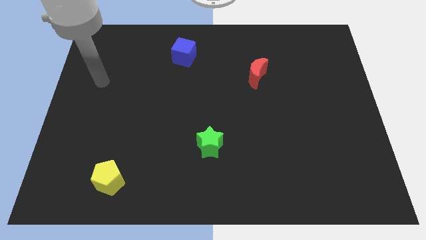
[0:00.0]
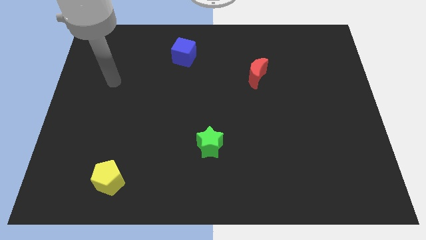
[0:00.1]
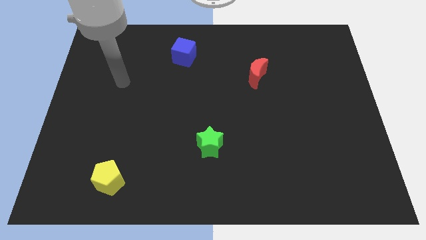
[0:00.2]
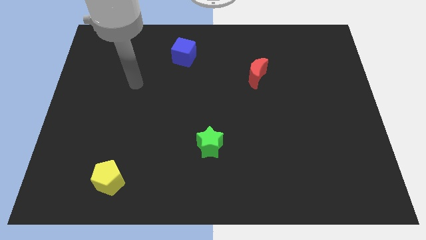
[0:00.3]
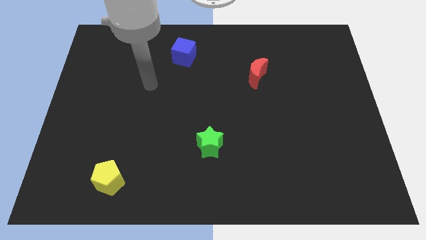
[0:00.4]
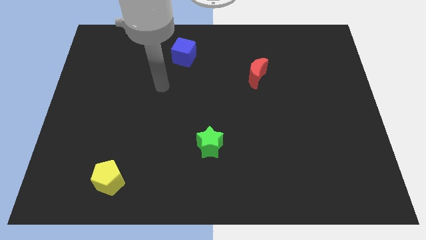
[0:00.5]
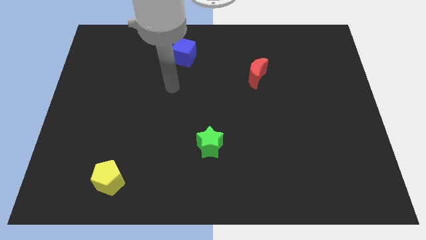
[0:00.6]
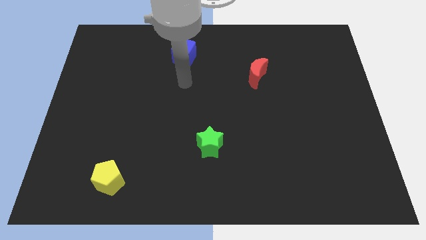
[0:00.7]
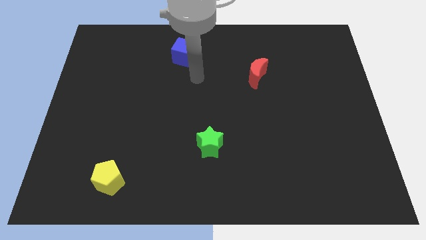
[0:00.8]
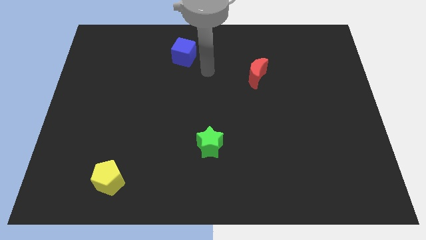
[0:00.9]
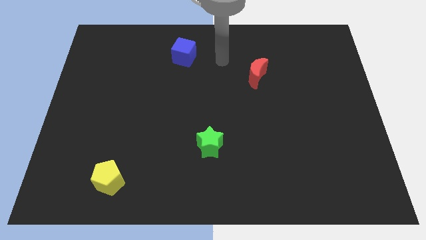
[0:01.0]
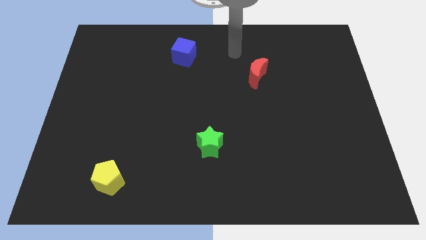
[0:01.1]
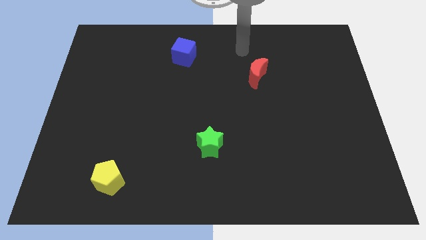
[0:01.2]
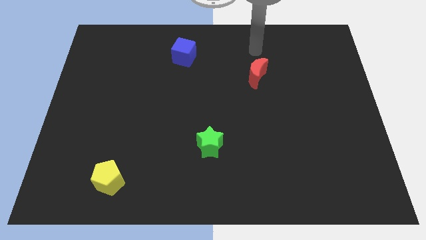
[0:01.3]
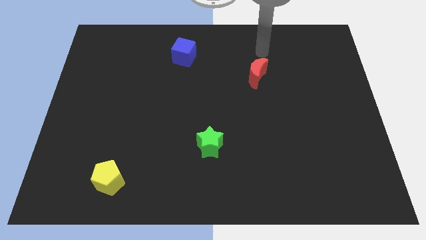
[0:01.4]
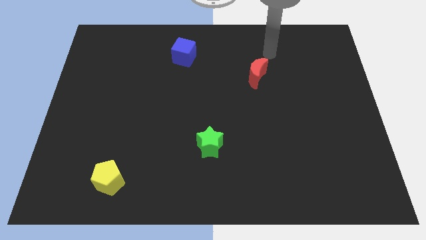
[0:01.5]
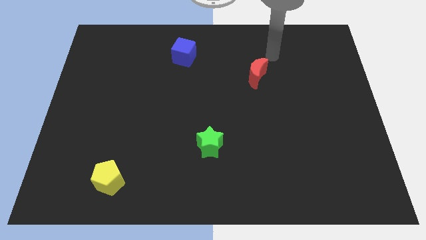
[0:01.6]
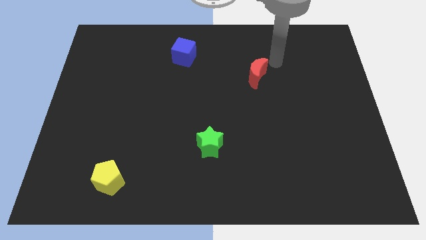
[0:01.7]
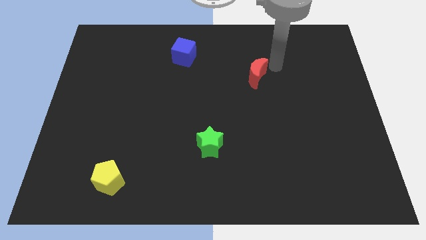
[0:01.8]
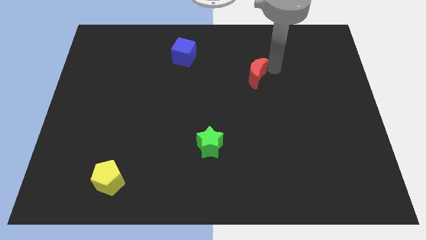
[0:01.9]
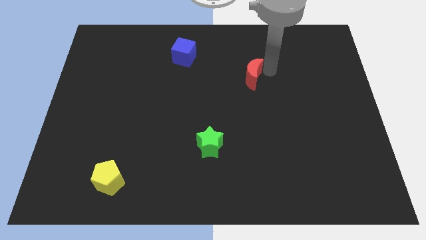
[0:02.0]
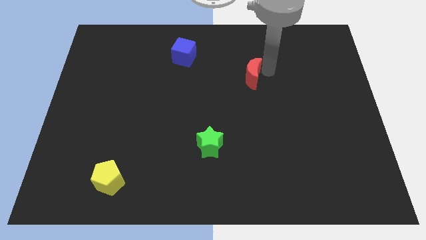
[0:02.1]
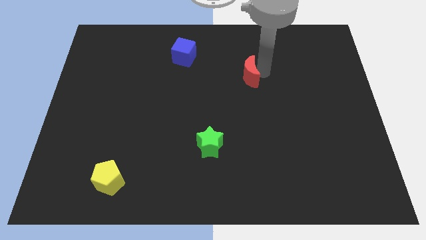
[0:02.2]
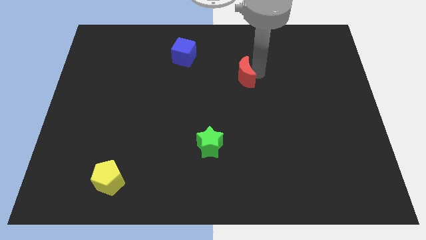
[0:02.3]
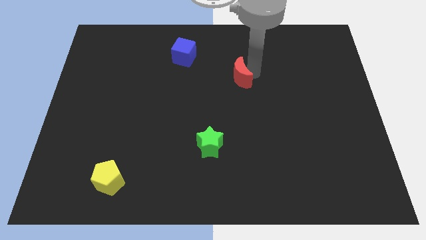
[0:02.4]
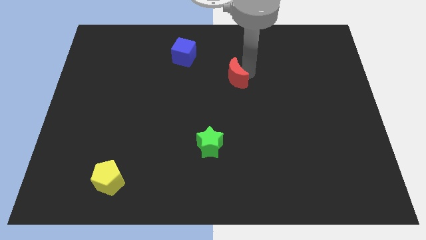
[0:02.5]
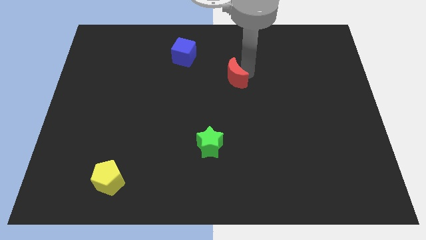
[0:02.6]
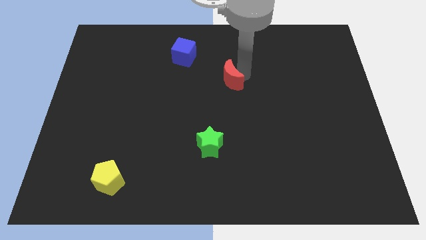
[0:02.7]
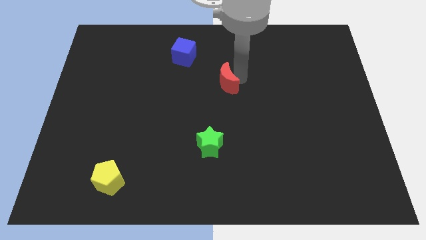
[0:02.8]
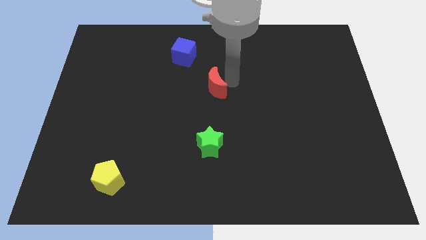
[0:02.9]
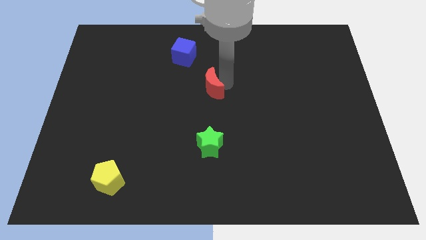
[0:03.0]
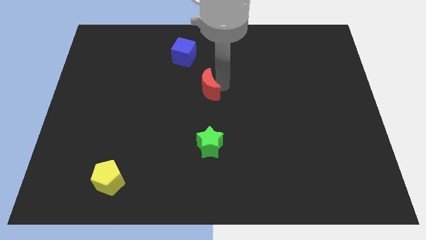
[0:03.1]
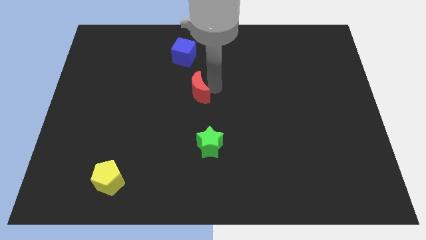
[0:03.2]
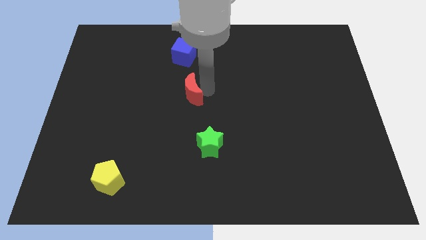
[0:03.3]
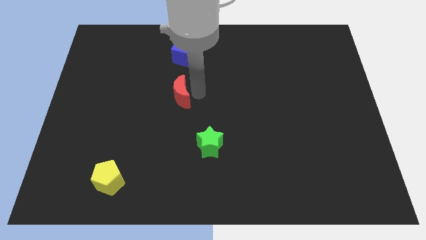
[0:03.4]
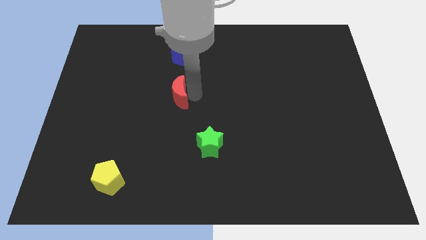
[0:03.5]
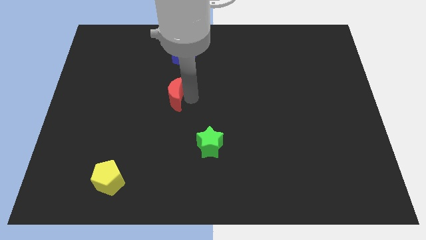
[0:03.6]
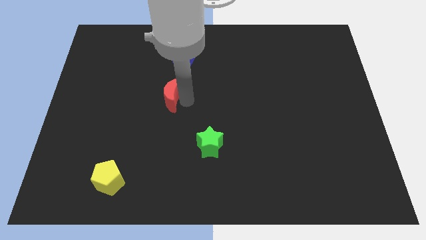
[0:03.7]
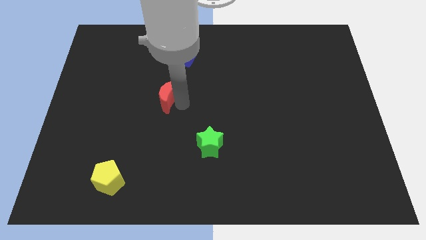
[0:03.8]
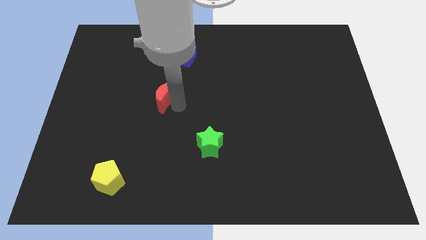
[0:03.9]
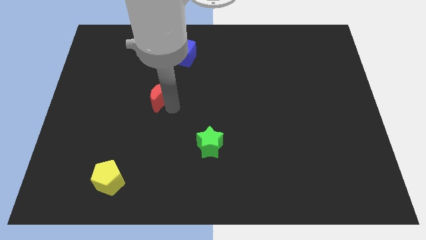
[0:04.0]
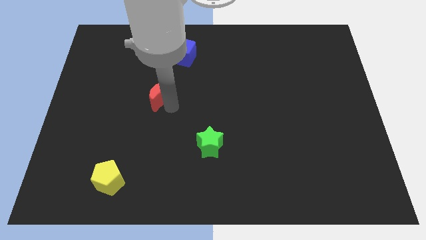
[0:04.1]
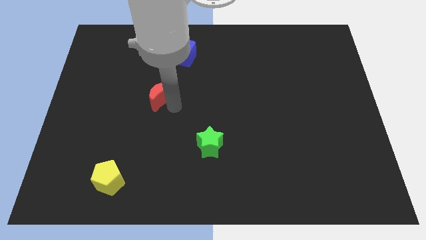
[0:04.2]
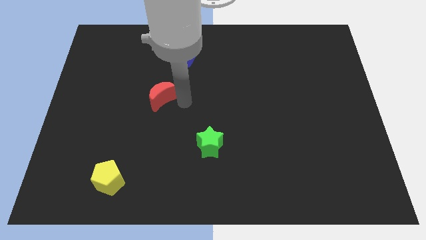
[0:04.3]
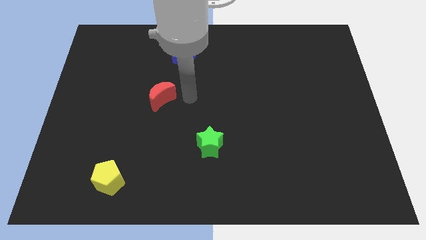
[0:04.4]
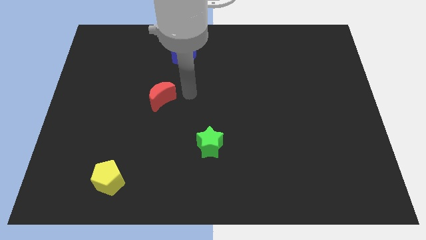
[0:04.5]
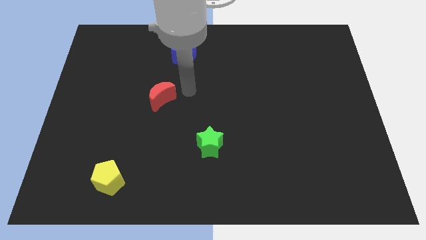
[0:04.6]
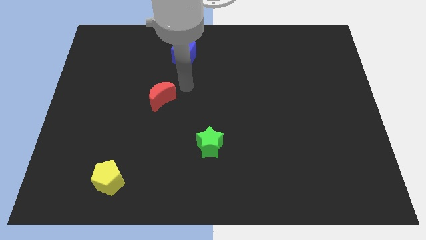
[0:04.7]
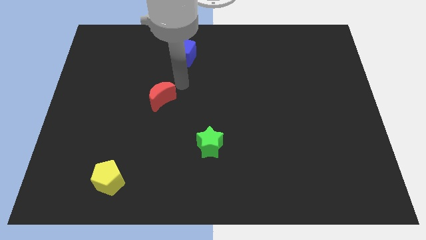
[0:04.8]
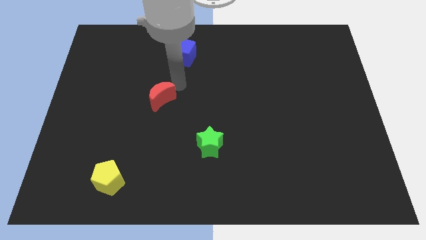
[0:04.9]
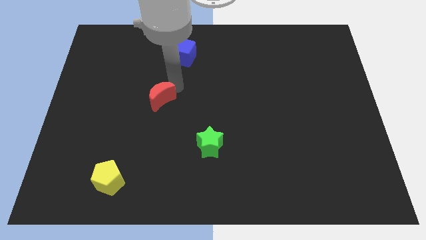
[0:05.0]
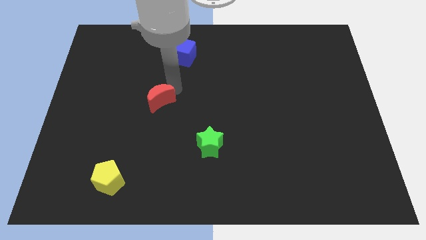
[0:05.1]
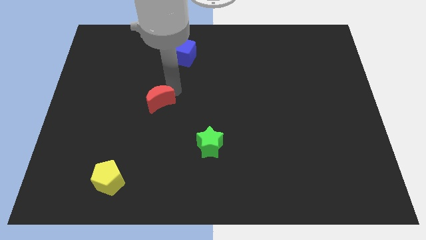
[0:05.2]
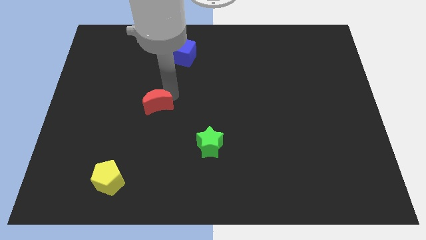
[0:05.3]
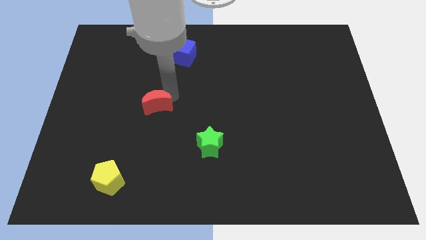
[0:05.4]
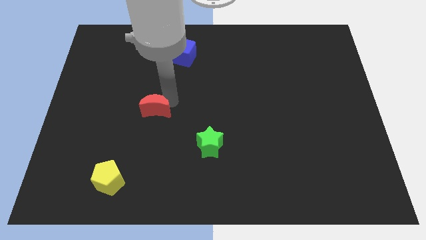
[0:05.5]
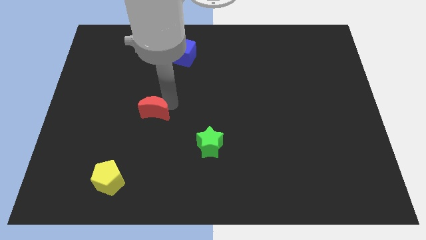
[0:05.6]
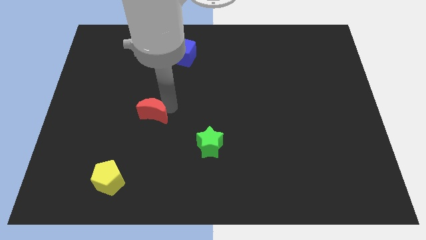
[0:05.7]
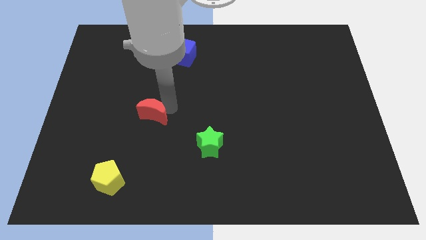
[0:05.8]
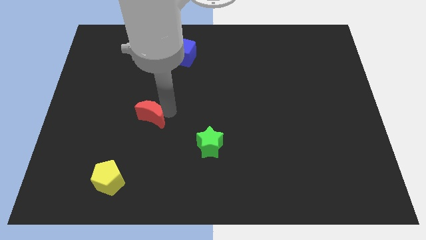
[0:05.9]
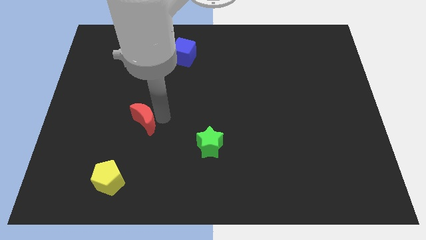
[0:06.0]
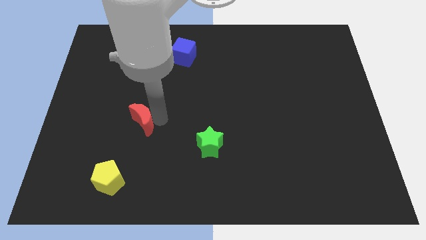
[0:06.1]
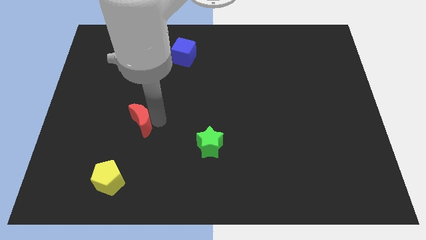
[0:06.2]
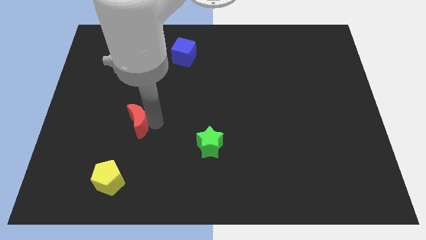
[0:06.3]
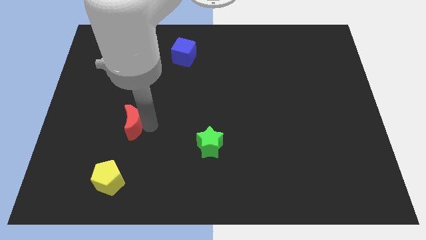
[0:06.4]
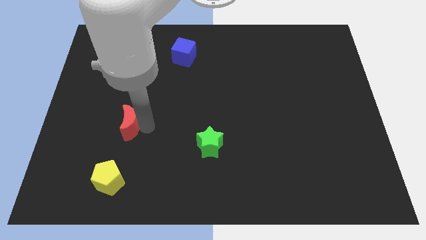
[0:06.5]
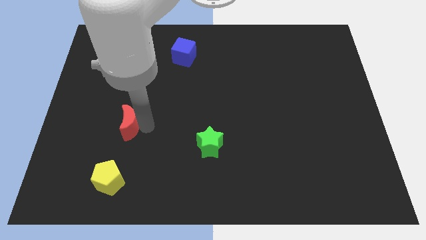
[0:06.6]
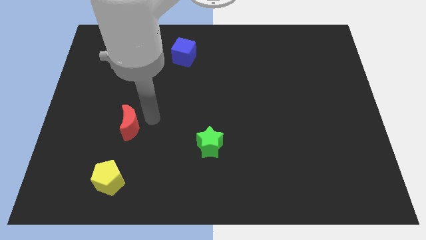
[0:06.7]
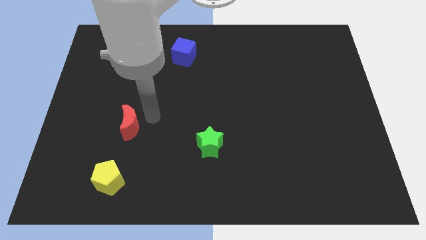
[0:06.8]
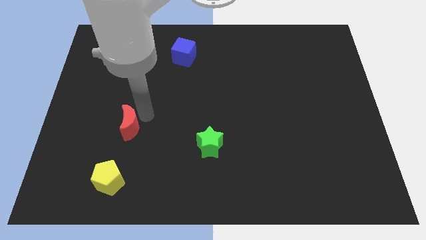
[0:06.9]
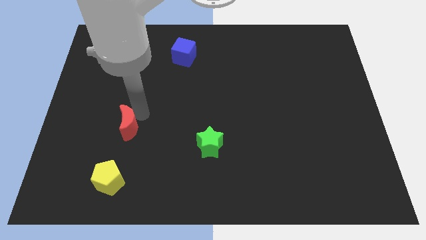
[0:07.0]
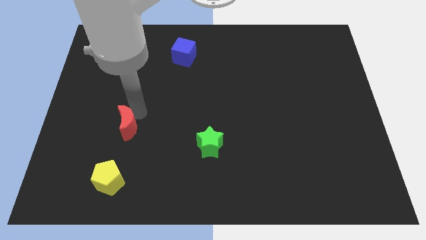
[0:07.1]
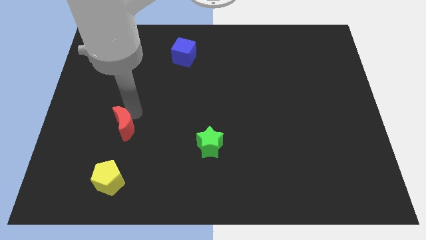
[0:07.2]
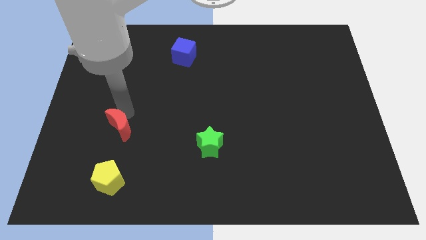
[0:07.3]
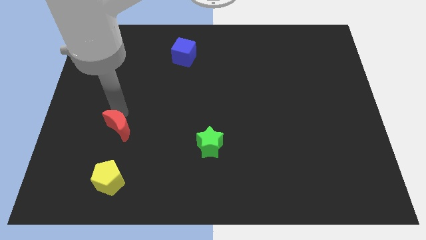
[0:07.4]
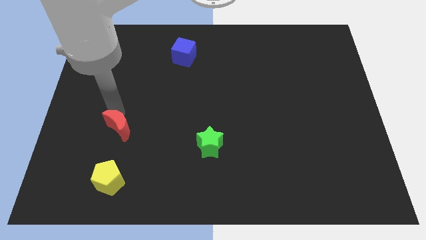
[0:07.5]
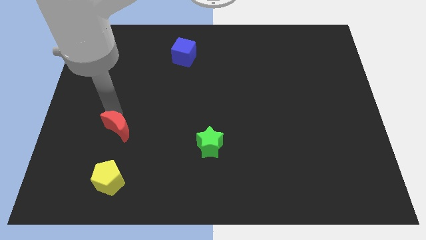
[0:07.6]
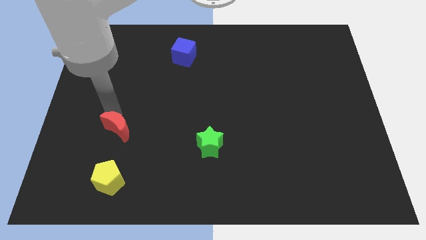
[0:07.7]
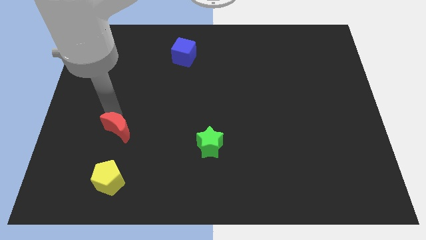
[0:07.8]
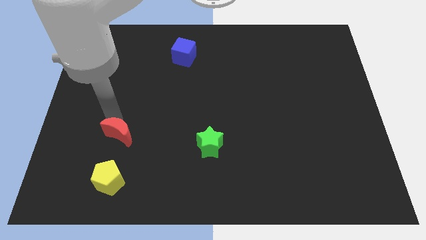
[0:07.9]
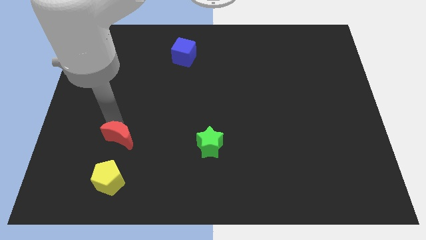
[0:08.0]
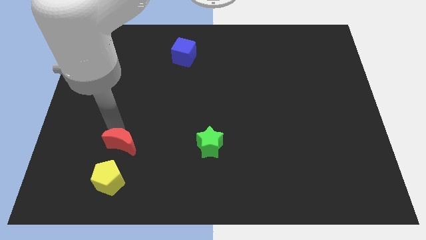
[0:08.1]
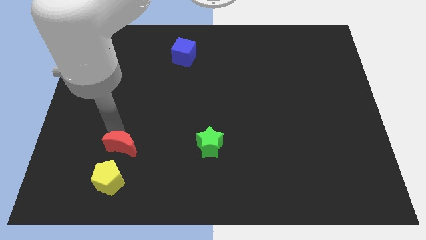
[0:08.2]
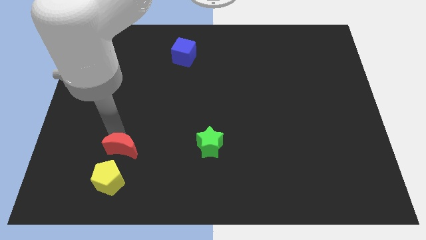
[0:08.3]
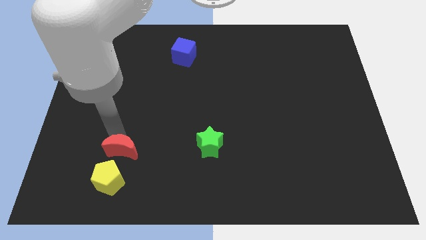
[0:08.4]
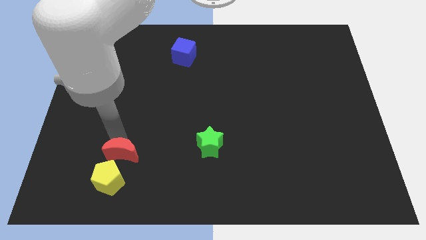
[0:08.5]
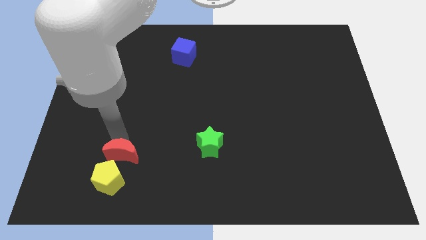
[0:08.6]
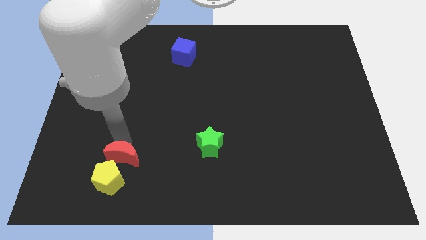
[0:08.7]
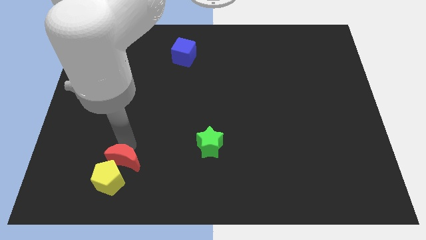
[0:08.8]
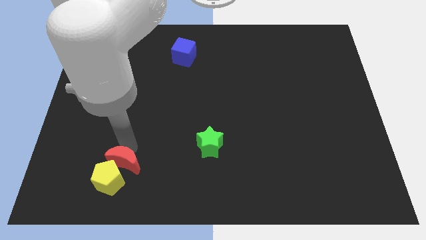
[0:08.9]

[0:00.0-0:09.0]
put the red block close to the yellow block
